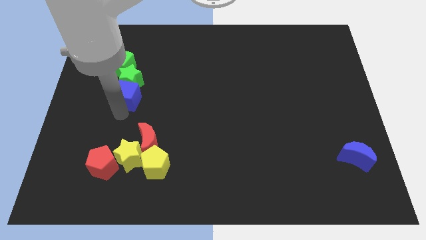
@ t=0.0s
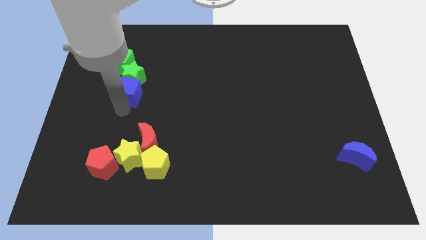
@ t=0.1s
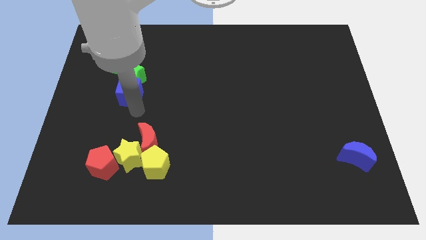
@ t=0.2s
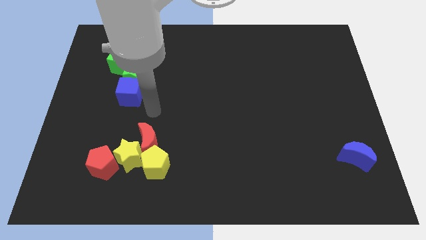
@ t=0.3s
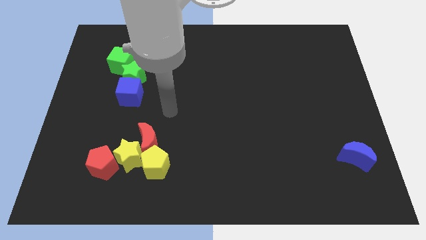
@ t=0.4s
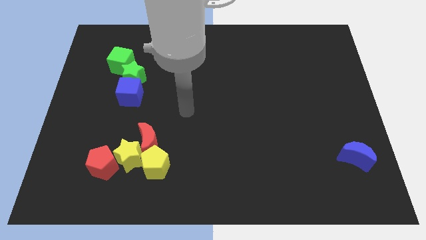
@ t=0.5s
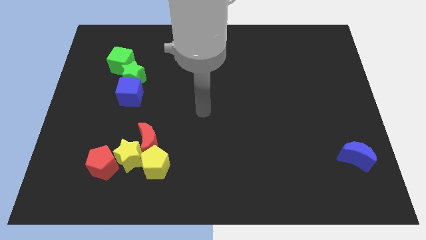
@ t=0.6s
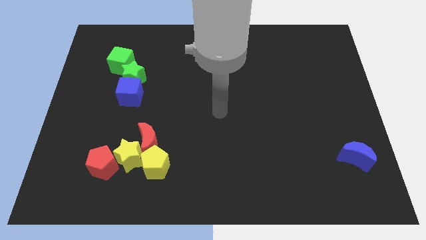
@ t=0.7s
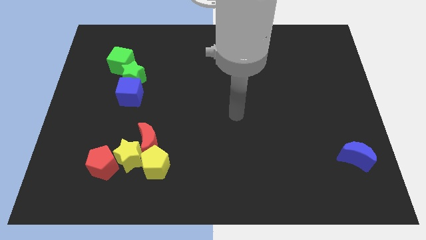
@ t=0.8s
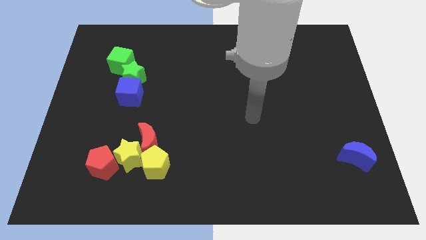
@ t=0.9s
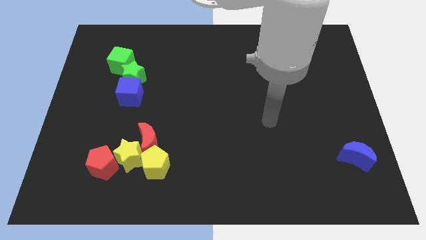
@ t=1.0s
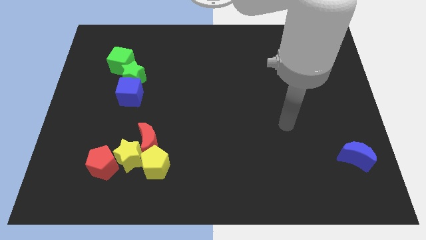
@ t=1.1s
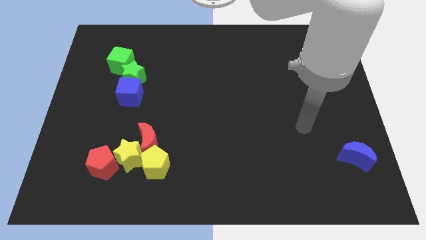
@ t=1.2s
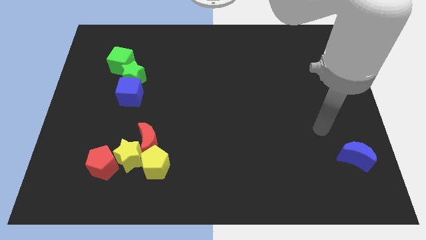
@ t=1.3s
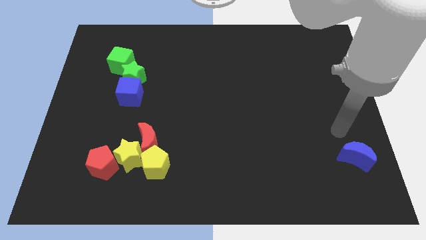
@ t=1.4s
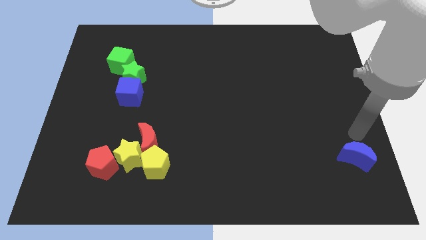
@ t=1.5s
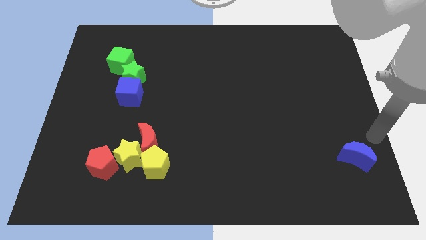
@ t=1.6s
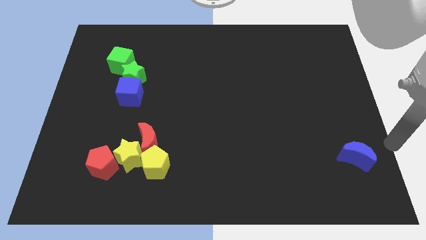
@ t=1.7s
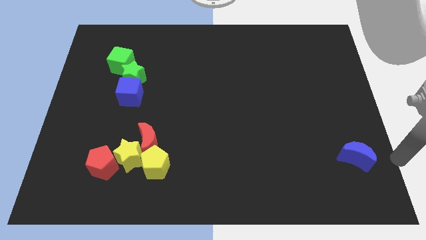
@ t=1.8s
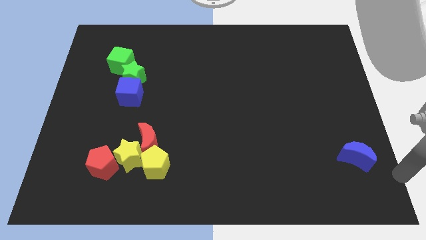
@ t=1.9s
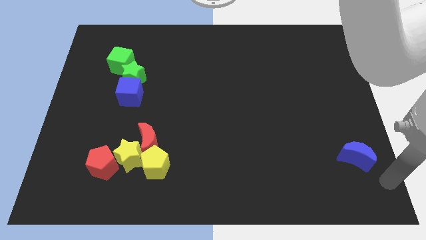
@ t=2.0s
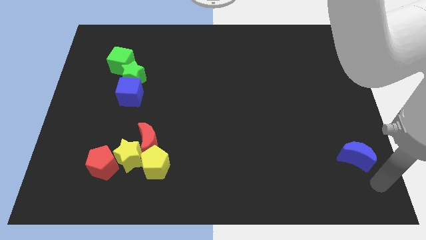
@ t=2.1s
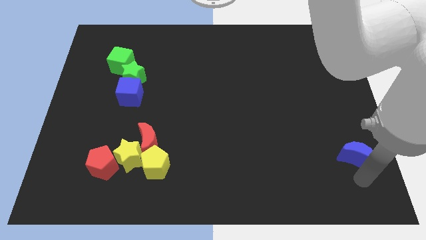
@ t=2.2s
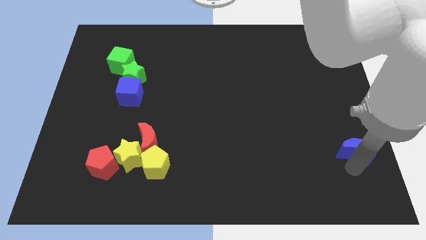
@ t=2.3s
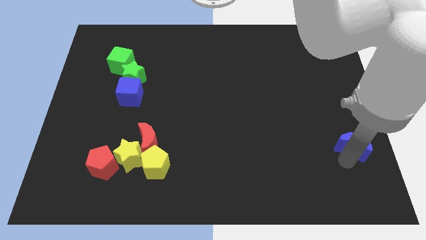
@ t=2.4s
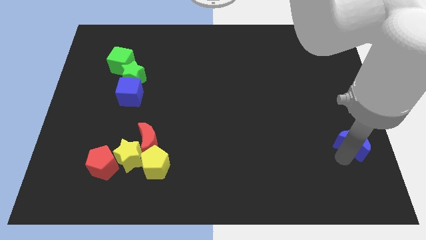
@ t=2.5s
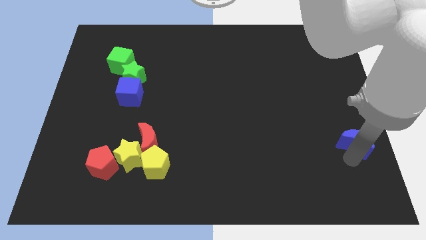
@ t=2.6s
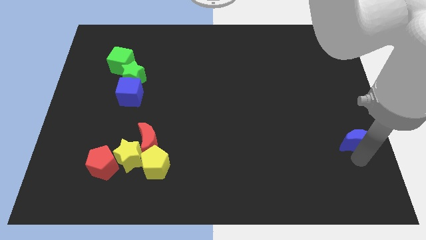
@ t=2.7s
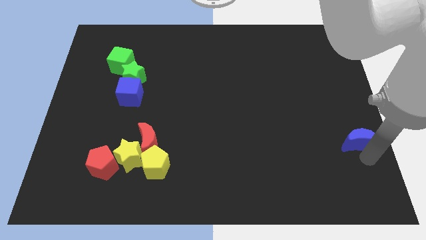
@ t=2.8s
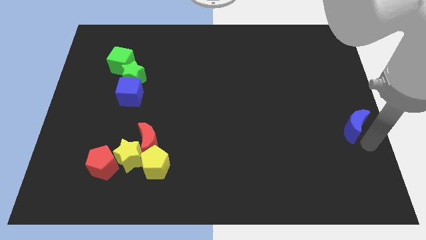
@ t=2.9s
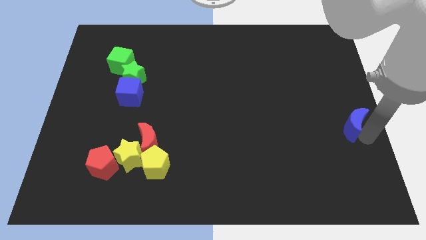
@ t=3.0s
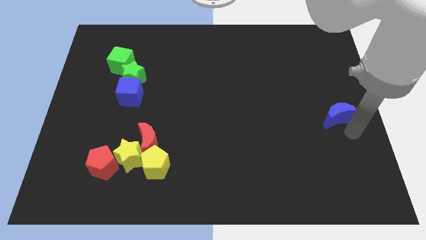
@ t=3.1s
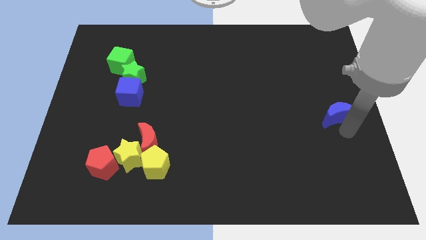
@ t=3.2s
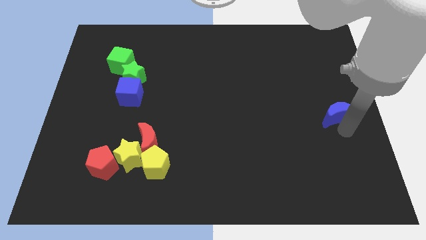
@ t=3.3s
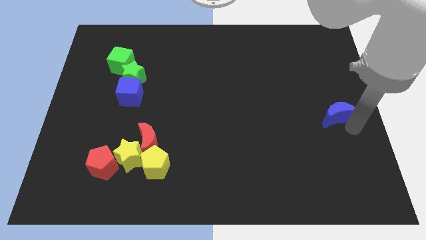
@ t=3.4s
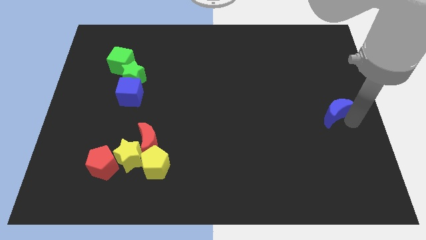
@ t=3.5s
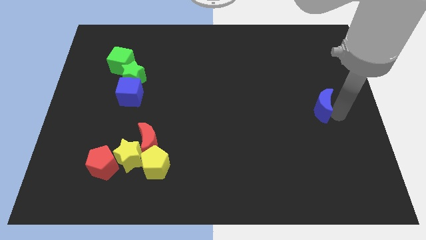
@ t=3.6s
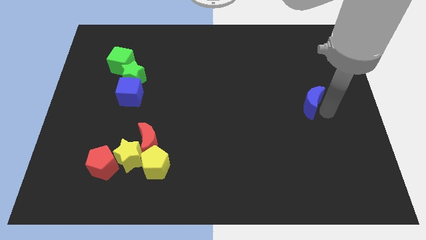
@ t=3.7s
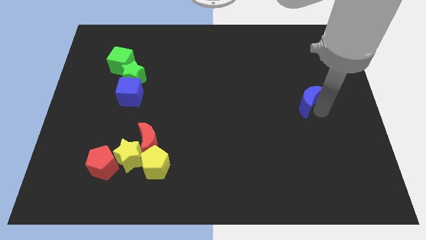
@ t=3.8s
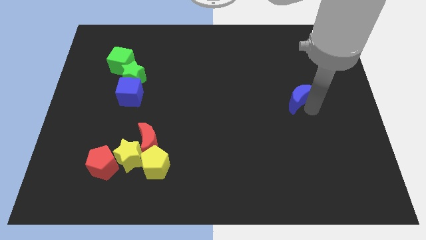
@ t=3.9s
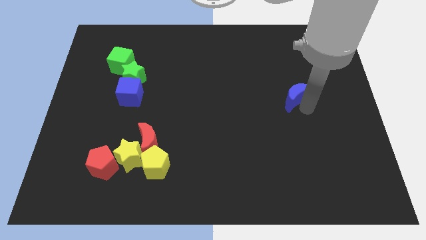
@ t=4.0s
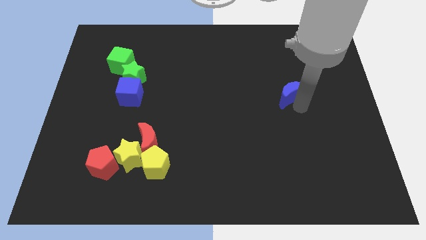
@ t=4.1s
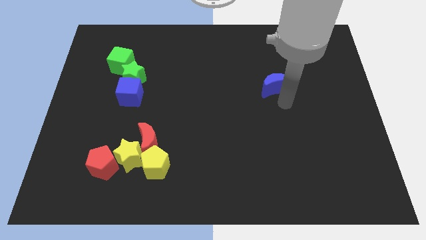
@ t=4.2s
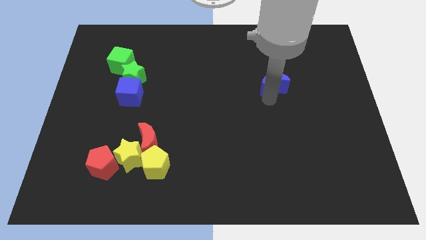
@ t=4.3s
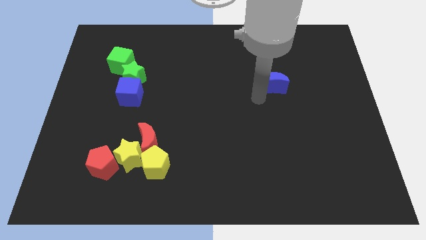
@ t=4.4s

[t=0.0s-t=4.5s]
place the blue crescent to the horizontal right of the blue cube

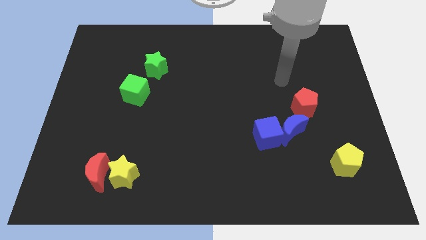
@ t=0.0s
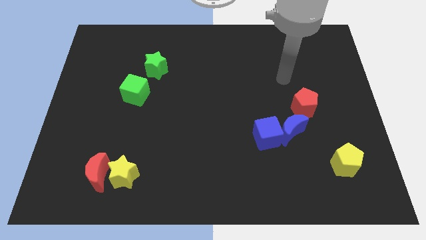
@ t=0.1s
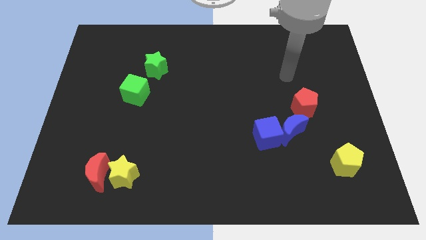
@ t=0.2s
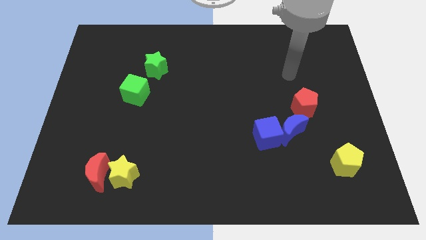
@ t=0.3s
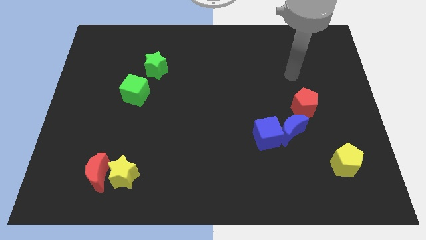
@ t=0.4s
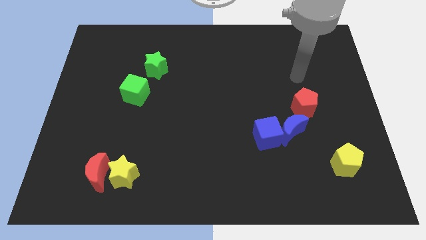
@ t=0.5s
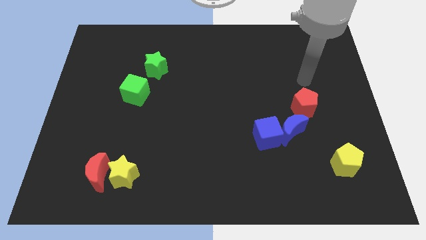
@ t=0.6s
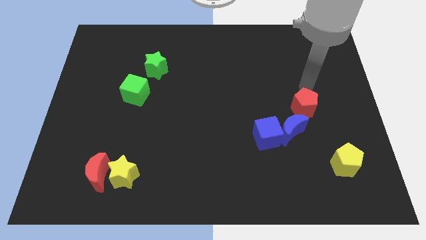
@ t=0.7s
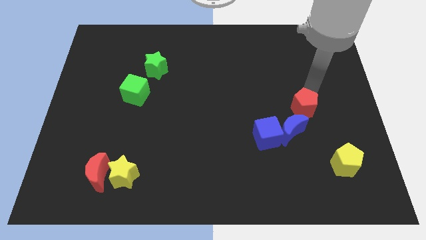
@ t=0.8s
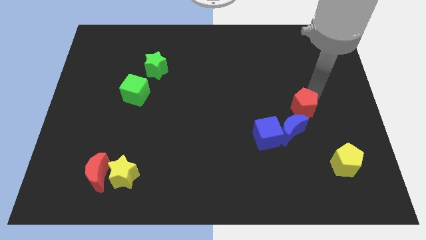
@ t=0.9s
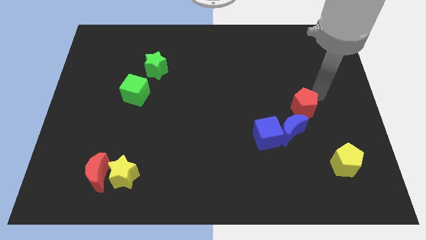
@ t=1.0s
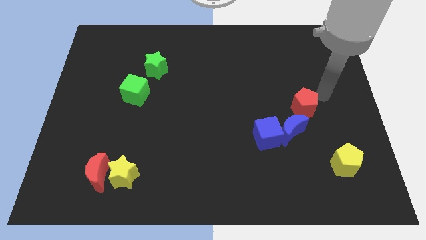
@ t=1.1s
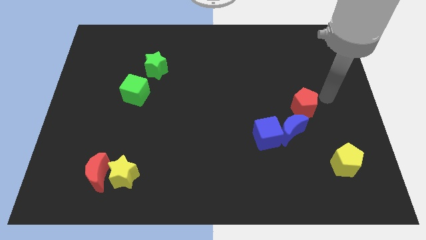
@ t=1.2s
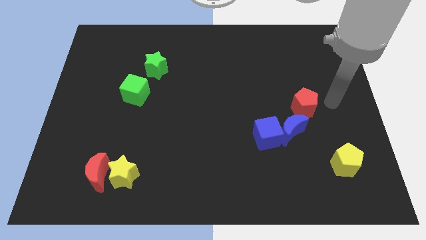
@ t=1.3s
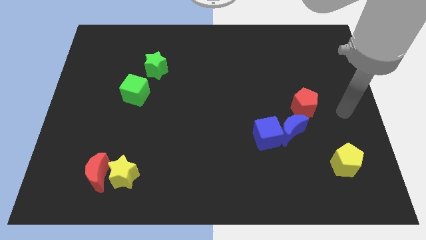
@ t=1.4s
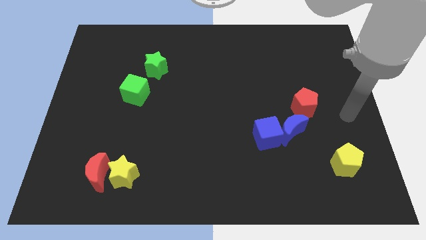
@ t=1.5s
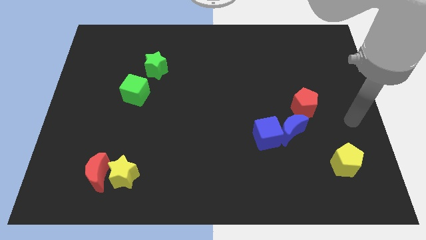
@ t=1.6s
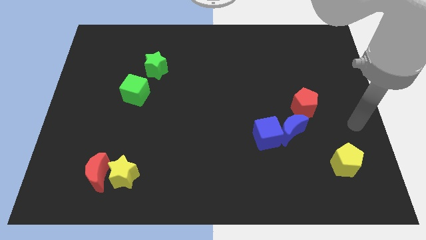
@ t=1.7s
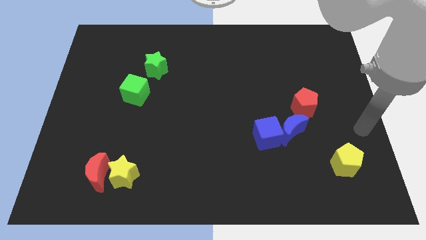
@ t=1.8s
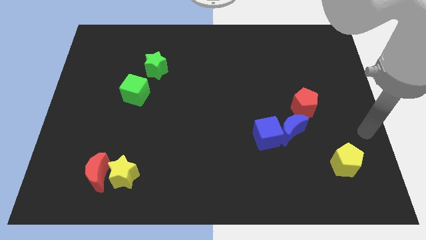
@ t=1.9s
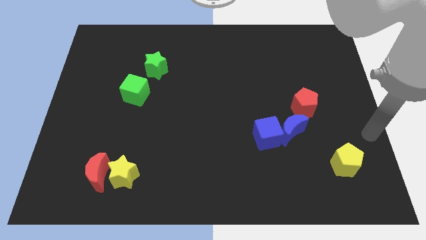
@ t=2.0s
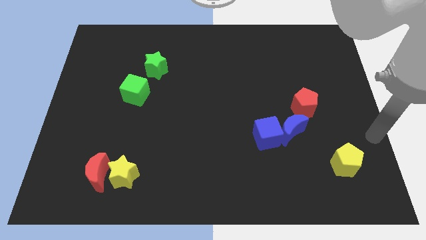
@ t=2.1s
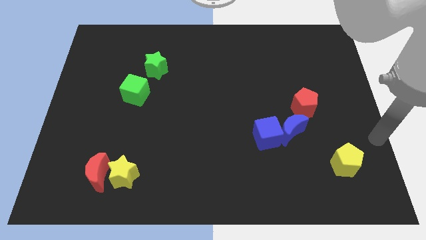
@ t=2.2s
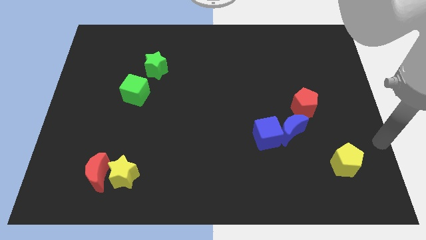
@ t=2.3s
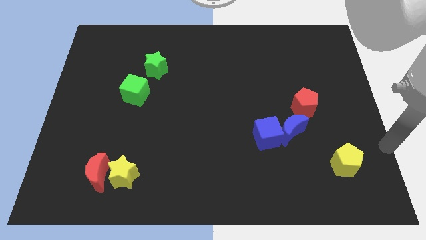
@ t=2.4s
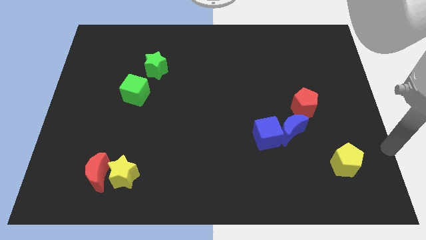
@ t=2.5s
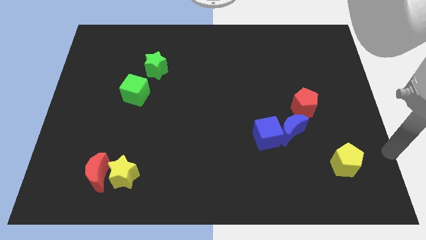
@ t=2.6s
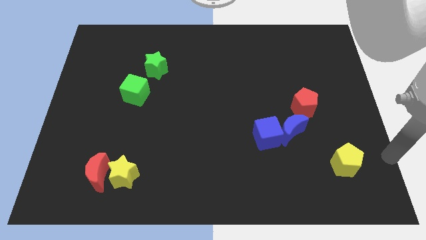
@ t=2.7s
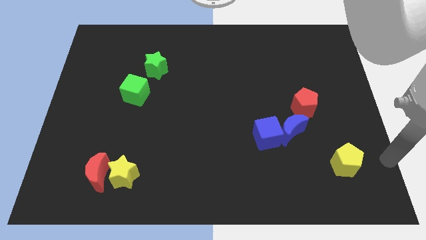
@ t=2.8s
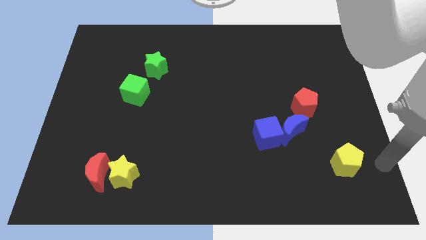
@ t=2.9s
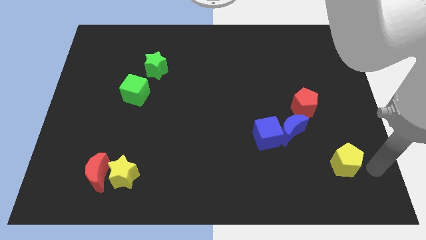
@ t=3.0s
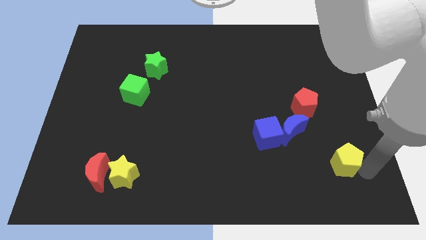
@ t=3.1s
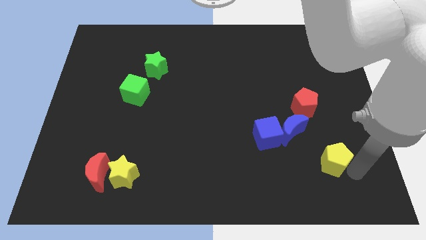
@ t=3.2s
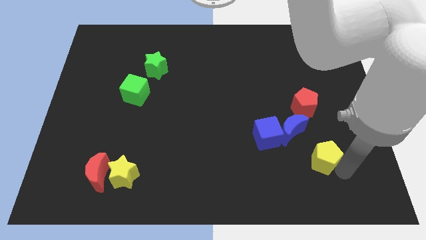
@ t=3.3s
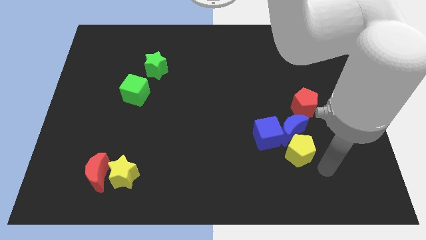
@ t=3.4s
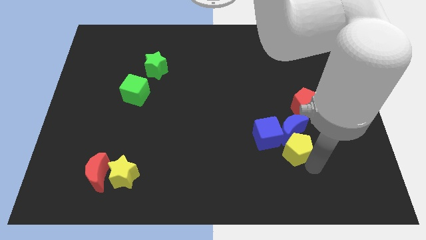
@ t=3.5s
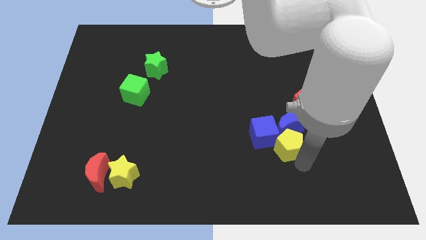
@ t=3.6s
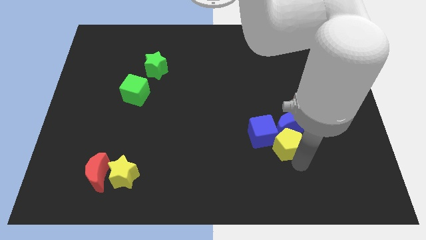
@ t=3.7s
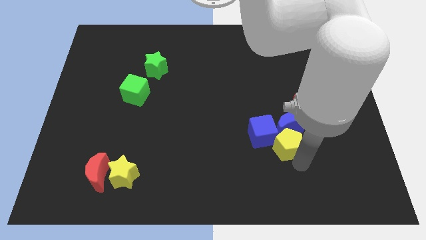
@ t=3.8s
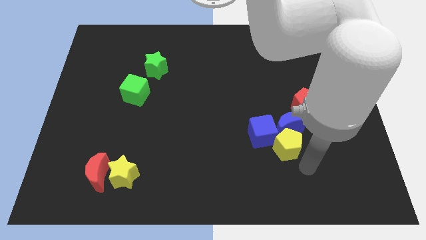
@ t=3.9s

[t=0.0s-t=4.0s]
push the yellow pentagon to the bottom right of the blue cube

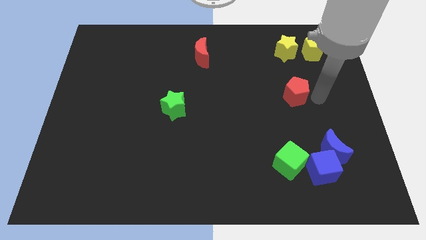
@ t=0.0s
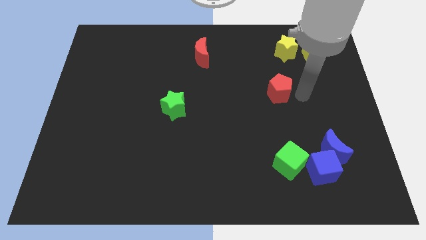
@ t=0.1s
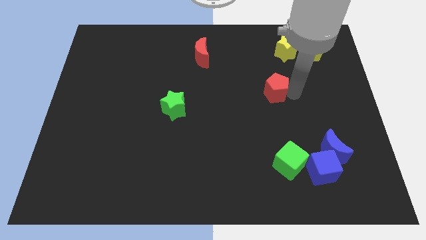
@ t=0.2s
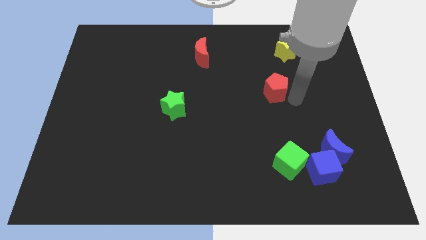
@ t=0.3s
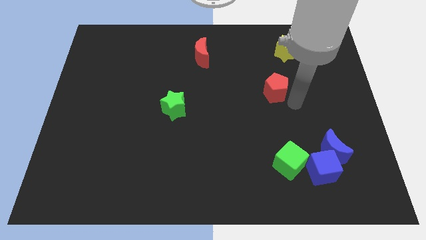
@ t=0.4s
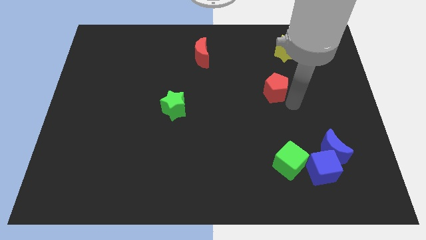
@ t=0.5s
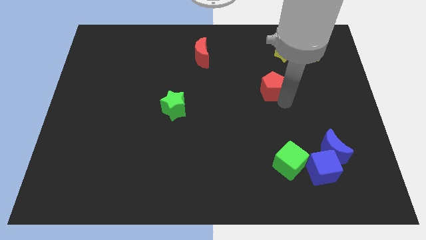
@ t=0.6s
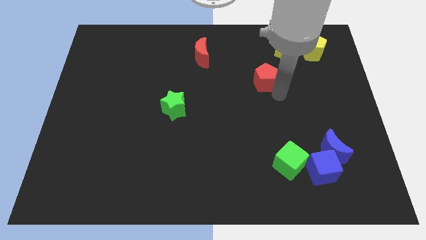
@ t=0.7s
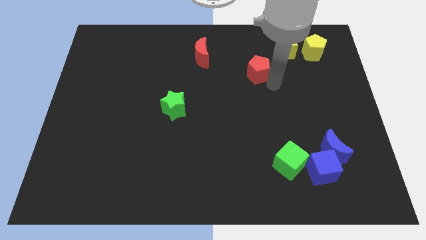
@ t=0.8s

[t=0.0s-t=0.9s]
move red pentagon to the left
